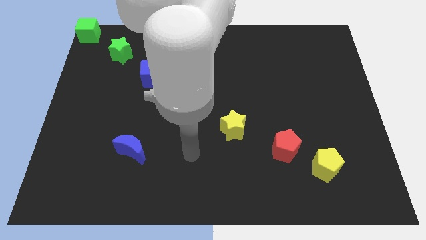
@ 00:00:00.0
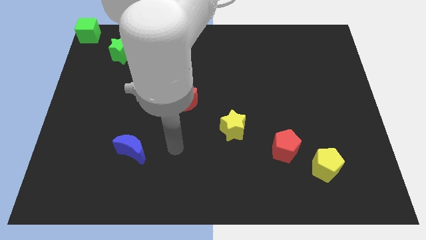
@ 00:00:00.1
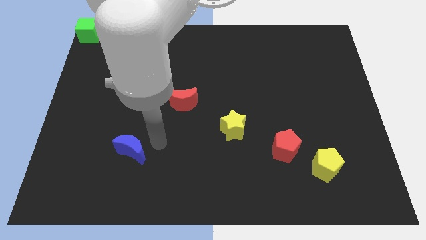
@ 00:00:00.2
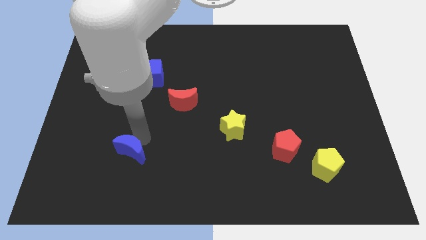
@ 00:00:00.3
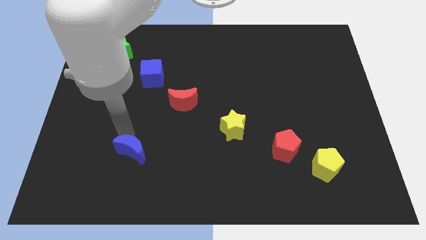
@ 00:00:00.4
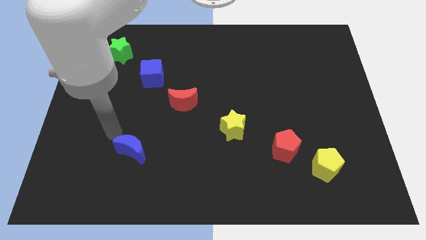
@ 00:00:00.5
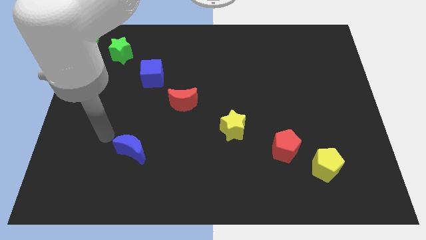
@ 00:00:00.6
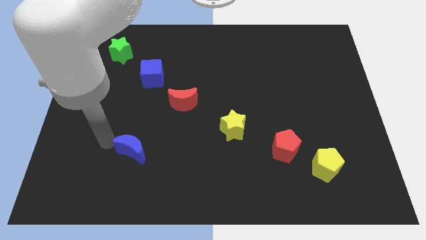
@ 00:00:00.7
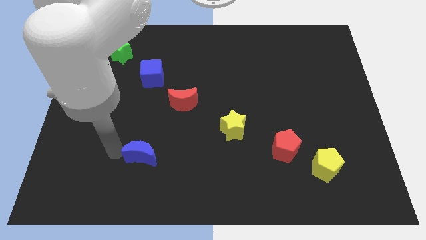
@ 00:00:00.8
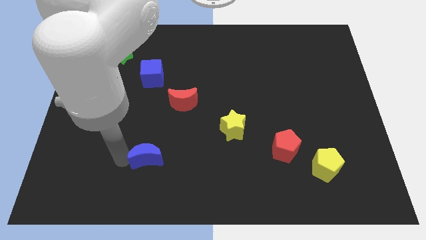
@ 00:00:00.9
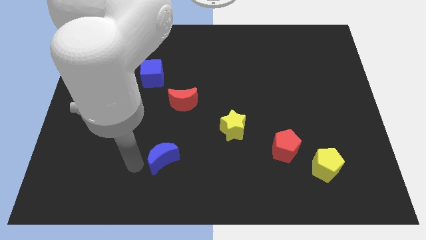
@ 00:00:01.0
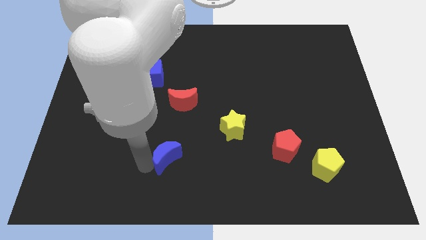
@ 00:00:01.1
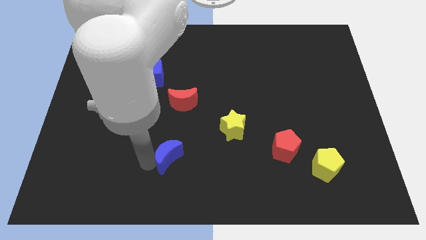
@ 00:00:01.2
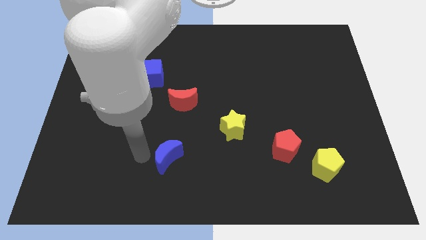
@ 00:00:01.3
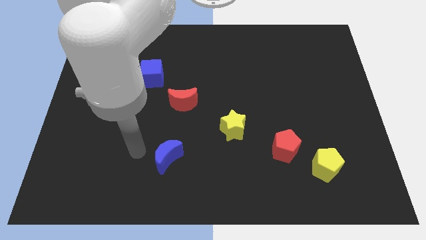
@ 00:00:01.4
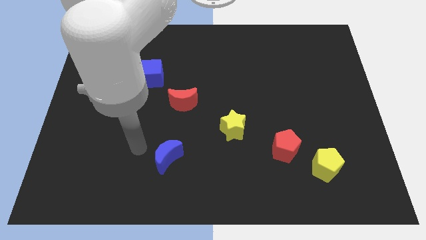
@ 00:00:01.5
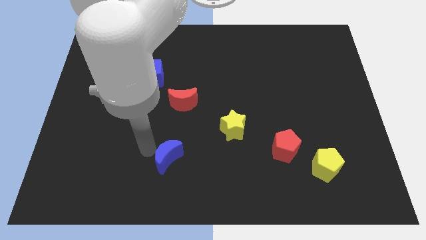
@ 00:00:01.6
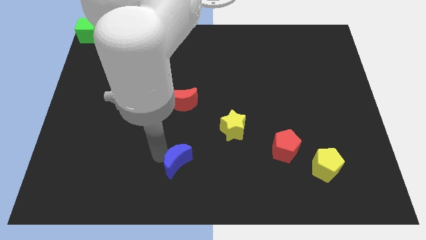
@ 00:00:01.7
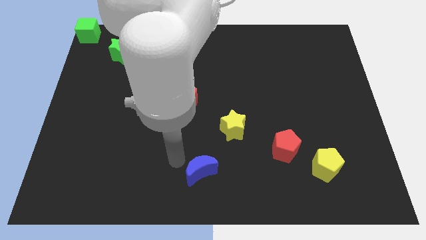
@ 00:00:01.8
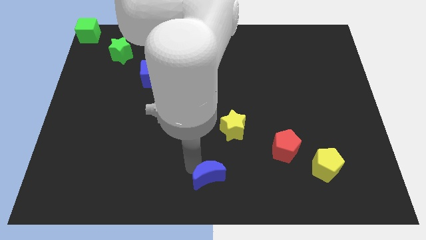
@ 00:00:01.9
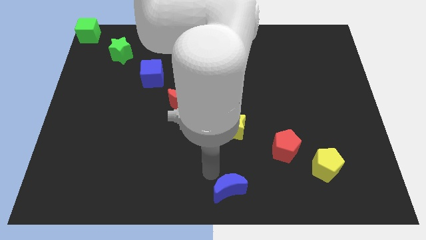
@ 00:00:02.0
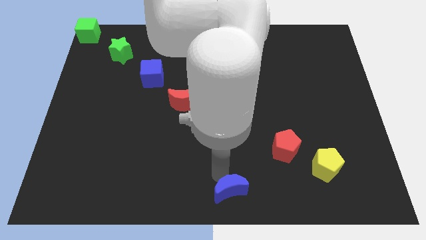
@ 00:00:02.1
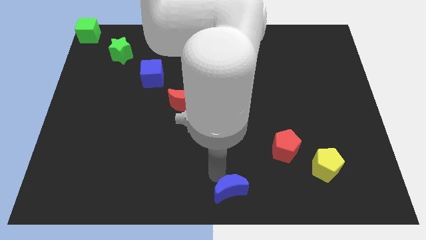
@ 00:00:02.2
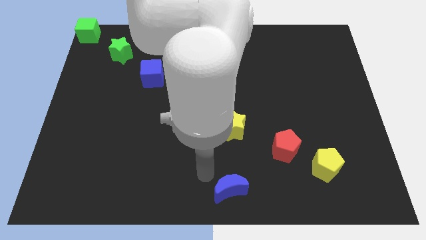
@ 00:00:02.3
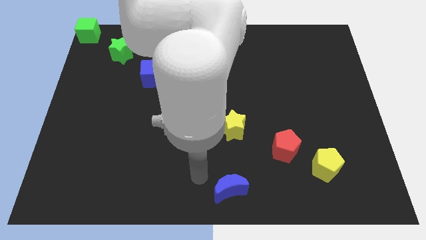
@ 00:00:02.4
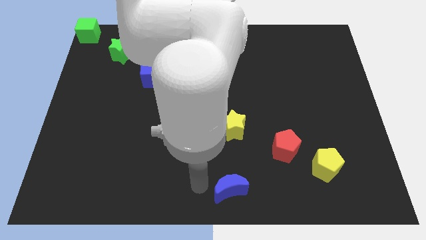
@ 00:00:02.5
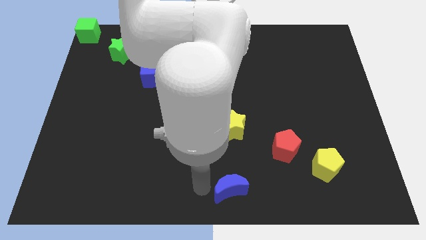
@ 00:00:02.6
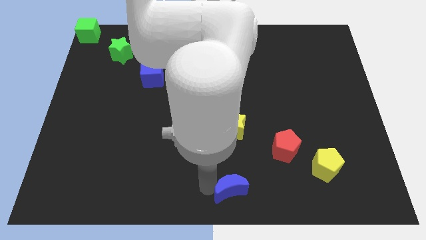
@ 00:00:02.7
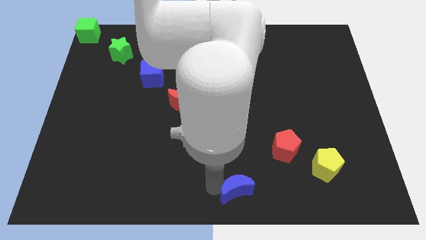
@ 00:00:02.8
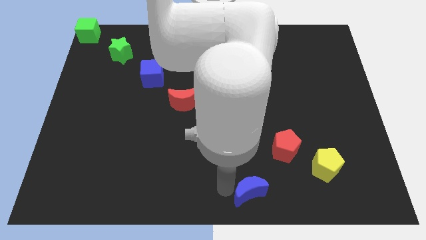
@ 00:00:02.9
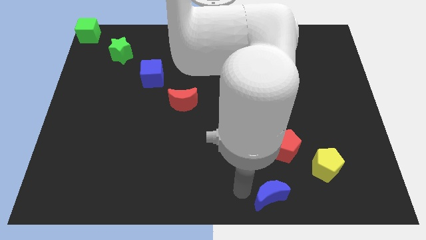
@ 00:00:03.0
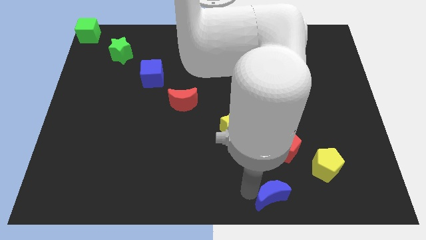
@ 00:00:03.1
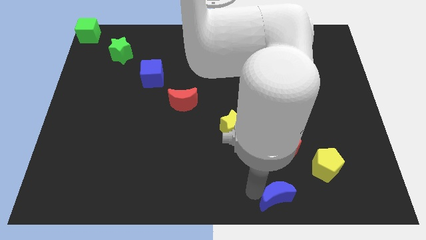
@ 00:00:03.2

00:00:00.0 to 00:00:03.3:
place the red moon to the bottom center

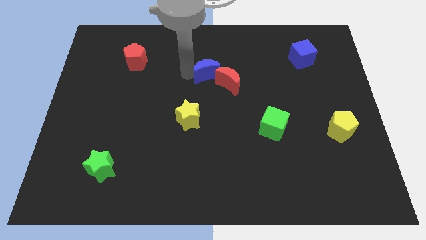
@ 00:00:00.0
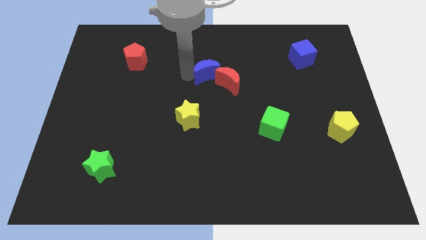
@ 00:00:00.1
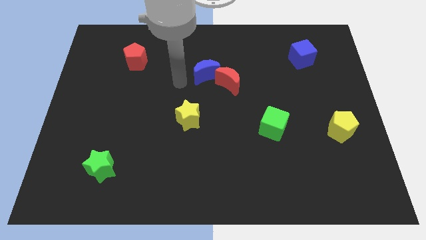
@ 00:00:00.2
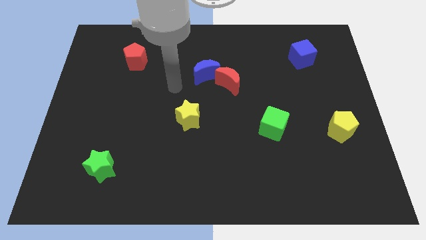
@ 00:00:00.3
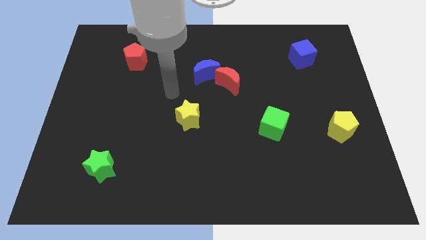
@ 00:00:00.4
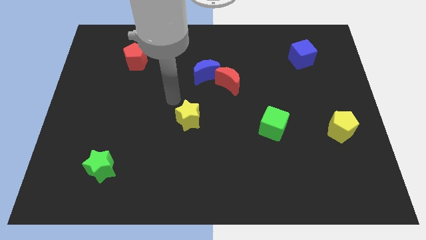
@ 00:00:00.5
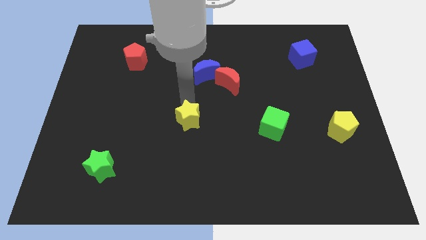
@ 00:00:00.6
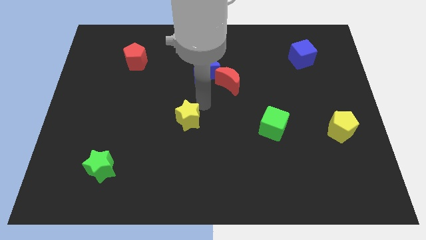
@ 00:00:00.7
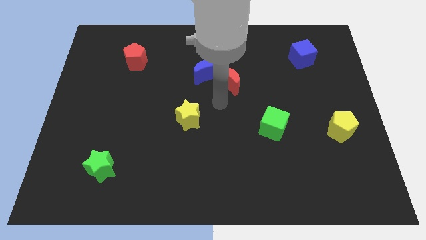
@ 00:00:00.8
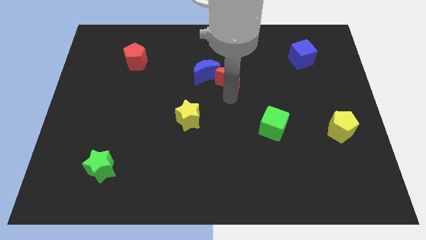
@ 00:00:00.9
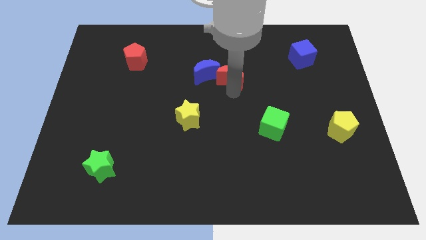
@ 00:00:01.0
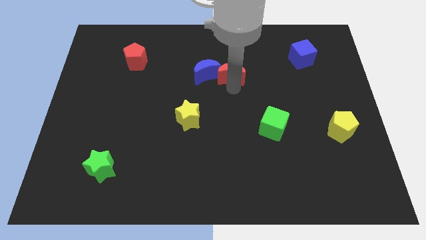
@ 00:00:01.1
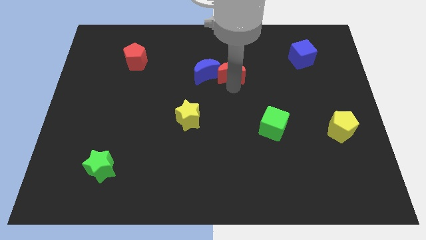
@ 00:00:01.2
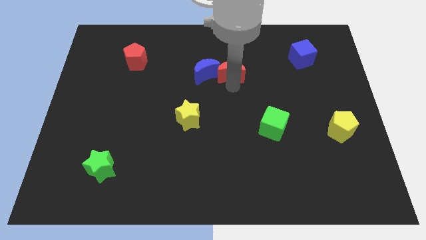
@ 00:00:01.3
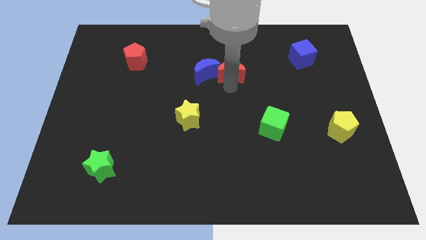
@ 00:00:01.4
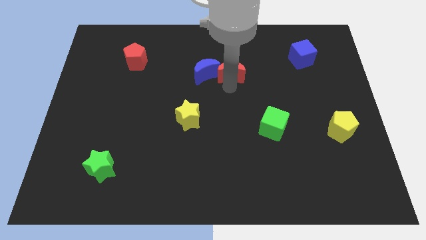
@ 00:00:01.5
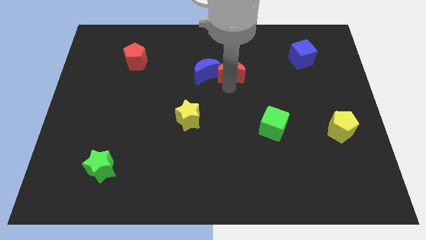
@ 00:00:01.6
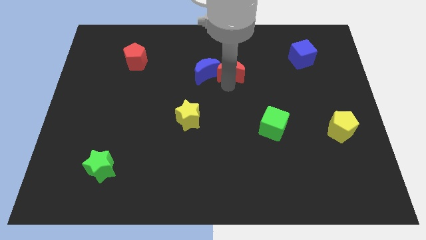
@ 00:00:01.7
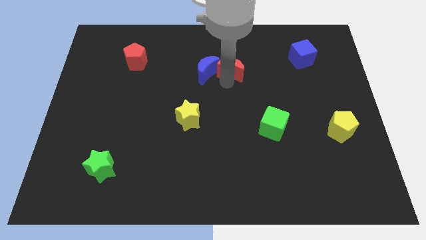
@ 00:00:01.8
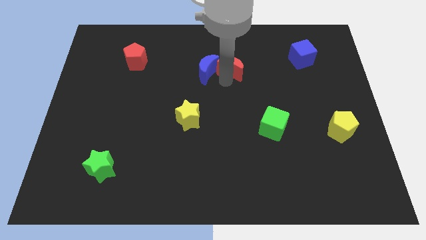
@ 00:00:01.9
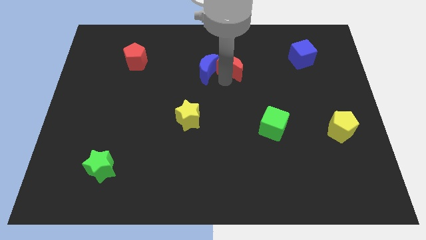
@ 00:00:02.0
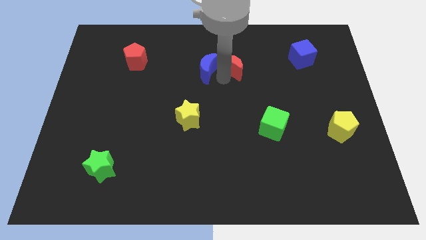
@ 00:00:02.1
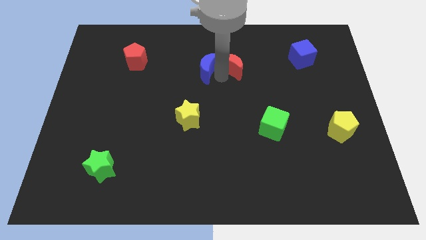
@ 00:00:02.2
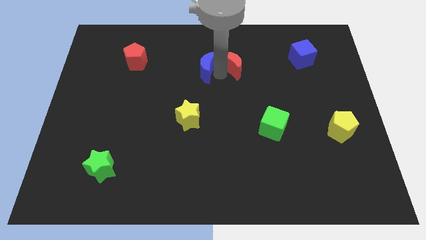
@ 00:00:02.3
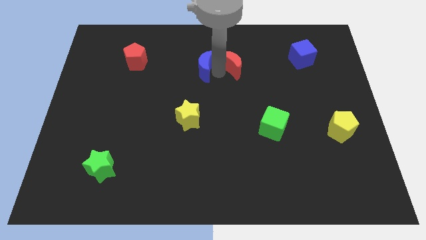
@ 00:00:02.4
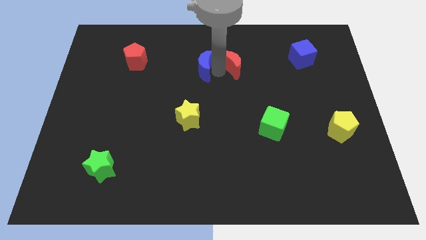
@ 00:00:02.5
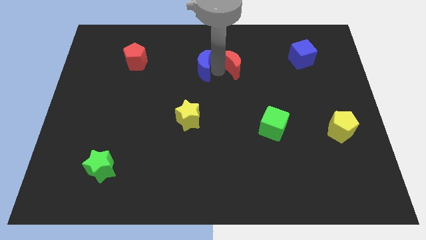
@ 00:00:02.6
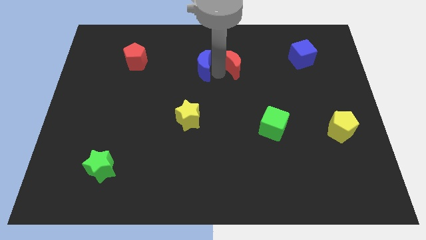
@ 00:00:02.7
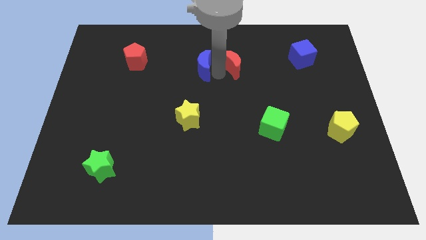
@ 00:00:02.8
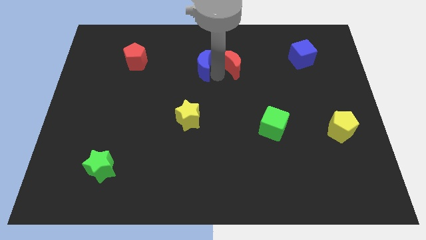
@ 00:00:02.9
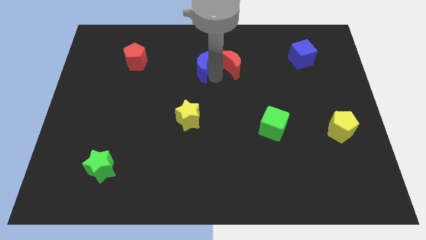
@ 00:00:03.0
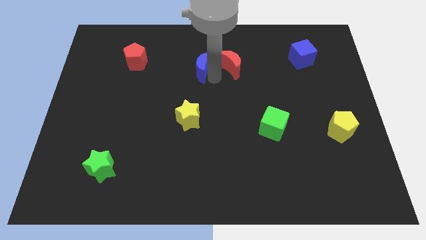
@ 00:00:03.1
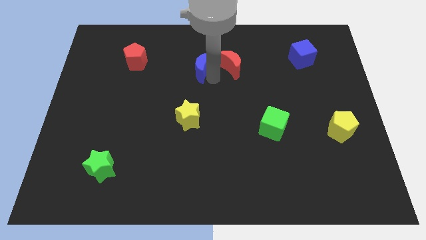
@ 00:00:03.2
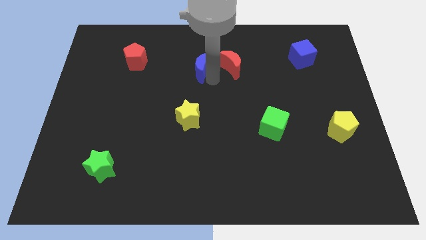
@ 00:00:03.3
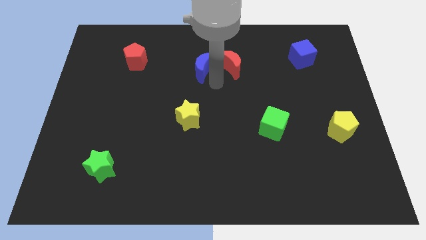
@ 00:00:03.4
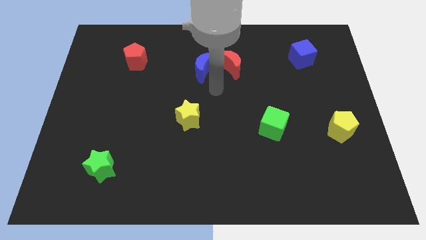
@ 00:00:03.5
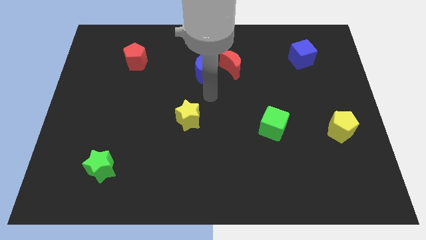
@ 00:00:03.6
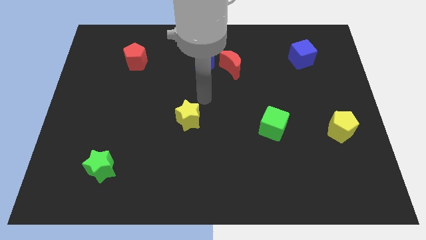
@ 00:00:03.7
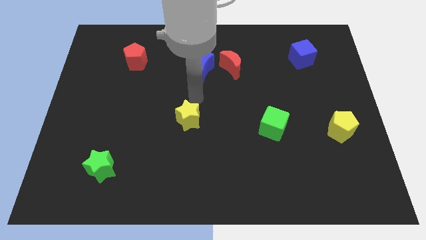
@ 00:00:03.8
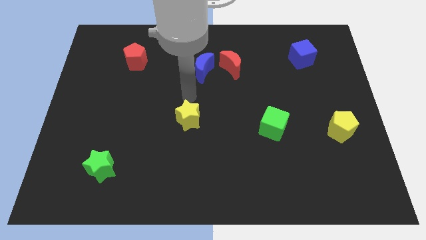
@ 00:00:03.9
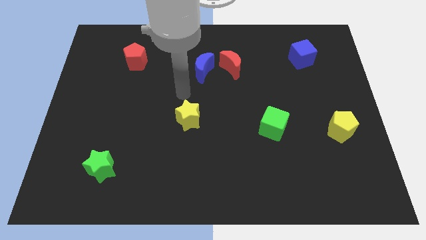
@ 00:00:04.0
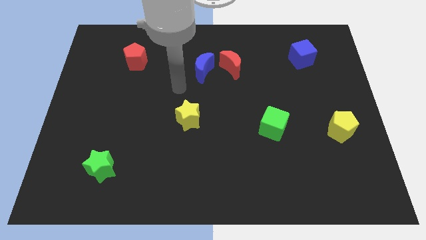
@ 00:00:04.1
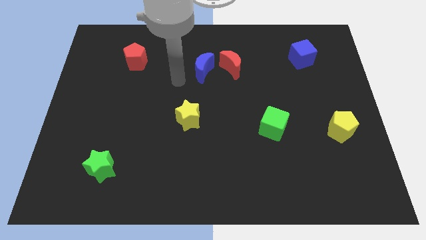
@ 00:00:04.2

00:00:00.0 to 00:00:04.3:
separate the blue moon and red moon

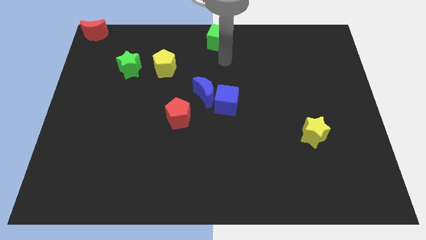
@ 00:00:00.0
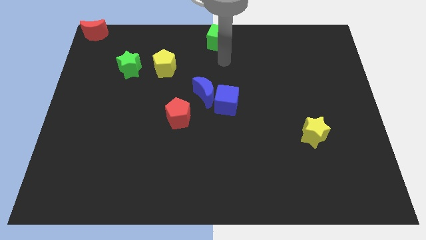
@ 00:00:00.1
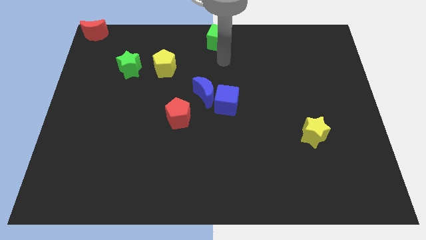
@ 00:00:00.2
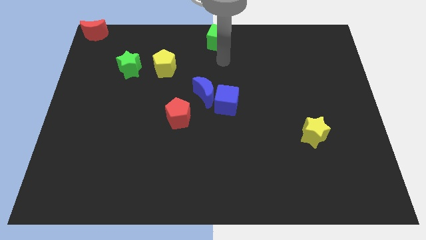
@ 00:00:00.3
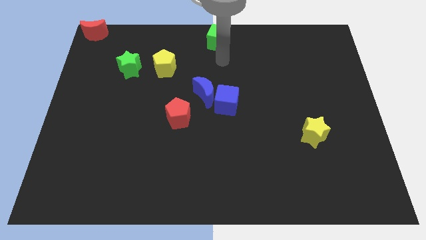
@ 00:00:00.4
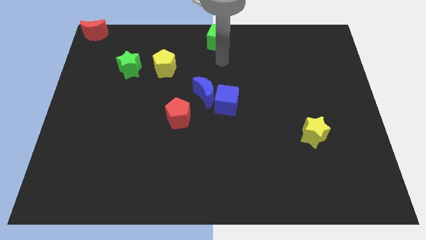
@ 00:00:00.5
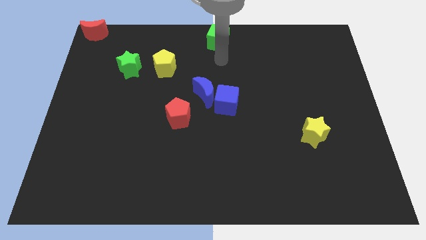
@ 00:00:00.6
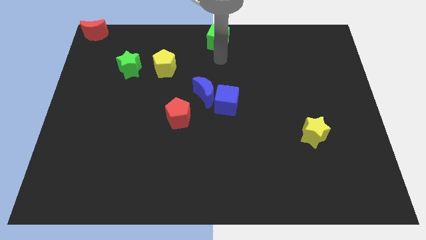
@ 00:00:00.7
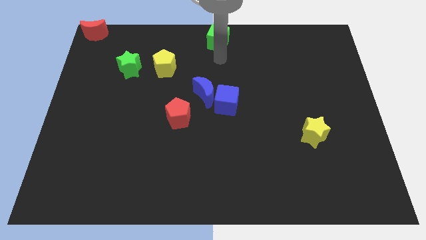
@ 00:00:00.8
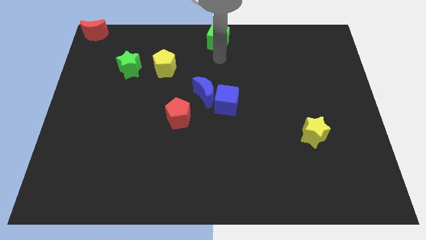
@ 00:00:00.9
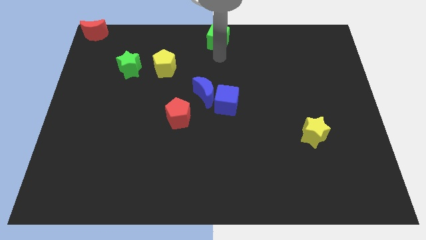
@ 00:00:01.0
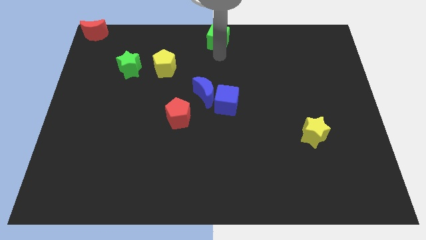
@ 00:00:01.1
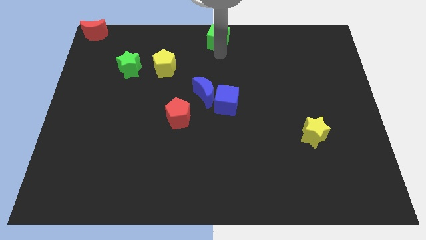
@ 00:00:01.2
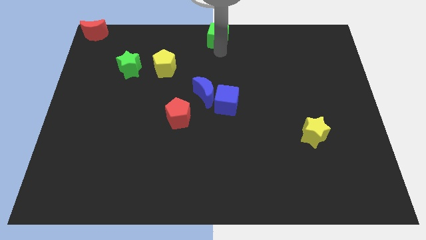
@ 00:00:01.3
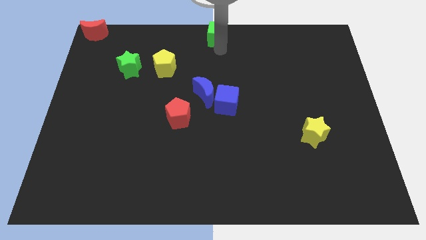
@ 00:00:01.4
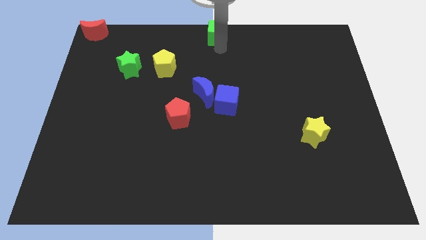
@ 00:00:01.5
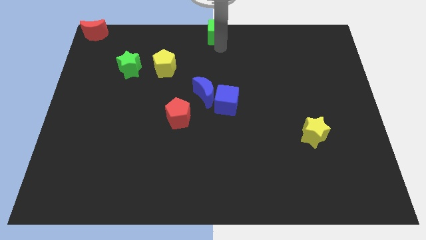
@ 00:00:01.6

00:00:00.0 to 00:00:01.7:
place green cube above blue cube
